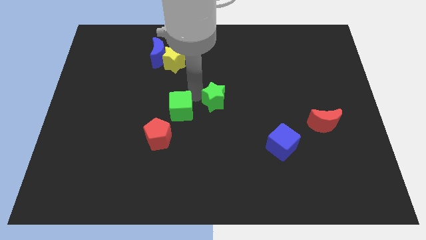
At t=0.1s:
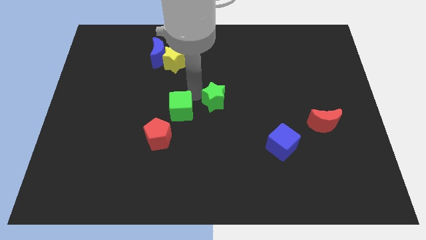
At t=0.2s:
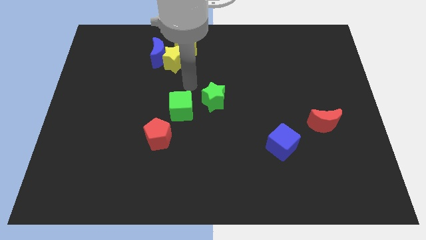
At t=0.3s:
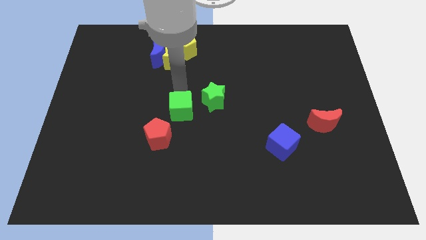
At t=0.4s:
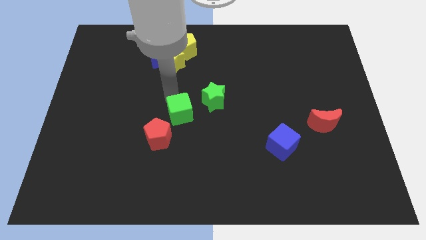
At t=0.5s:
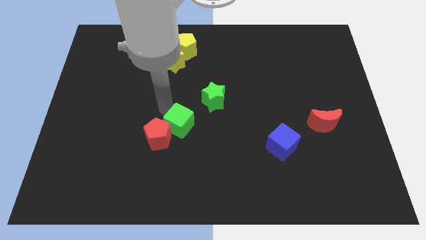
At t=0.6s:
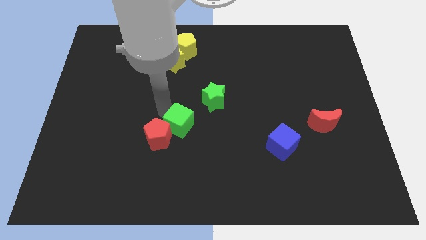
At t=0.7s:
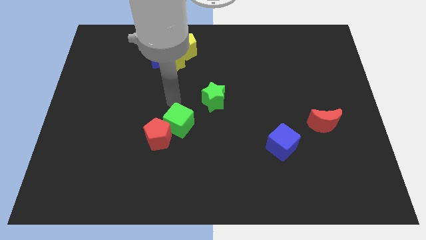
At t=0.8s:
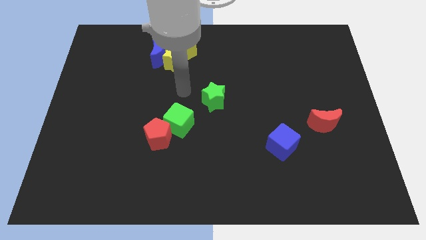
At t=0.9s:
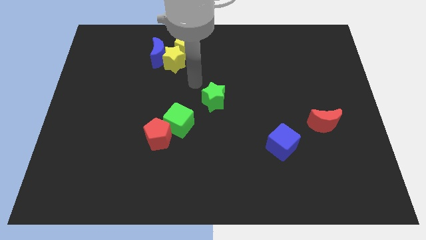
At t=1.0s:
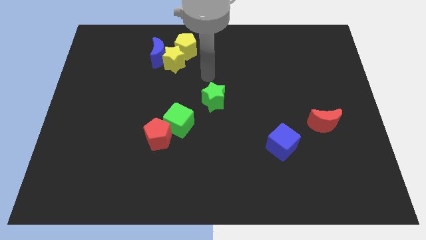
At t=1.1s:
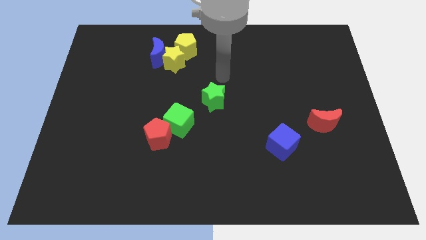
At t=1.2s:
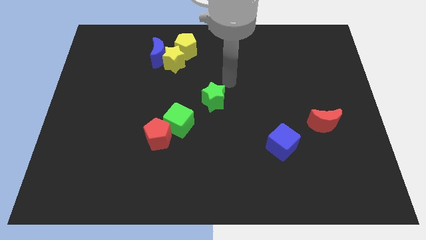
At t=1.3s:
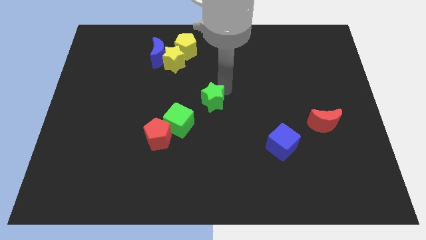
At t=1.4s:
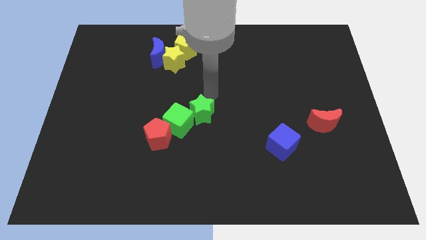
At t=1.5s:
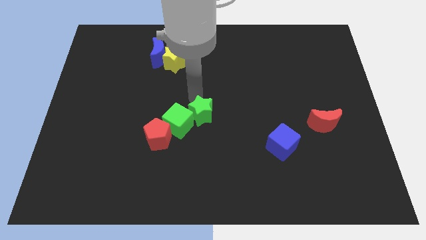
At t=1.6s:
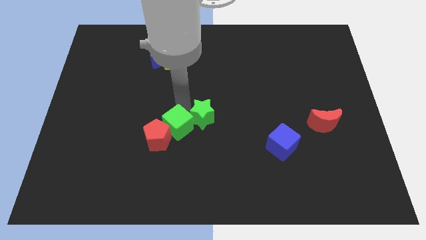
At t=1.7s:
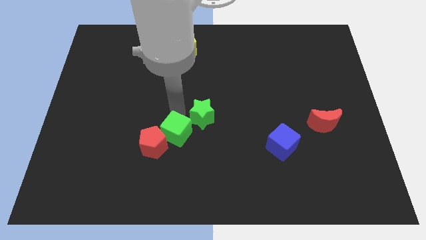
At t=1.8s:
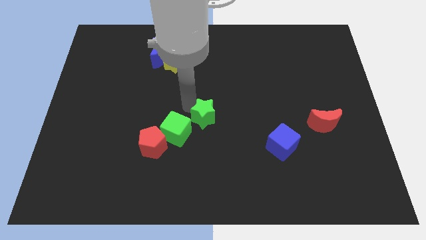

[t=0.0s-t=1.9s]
put the green star close to the green block

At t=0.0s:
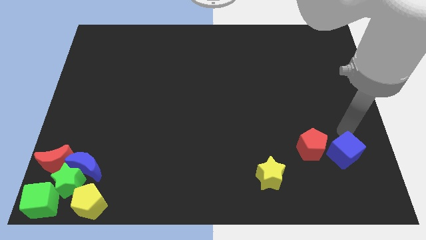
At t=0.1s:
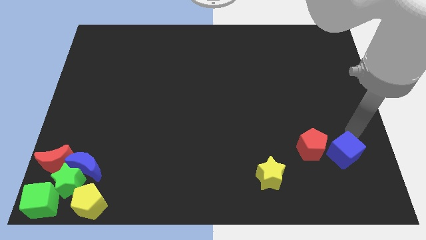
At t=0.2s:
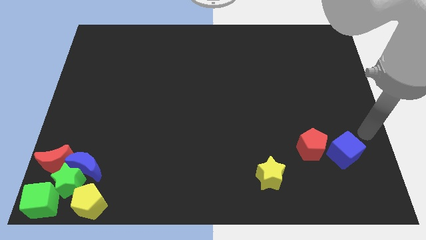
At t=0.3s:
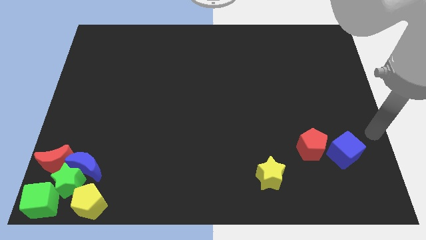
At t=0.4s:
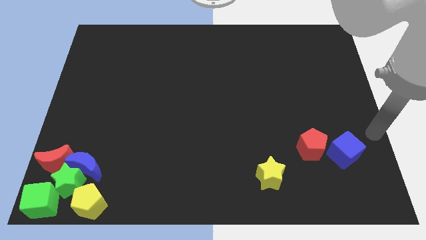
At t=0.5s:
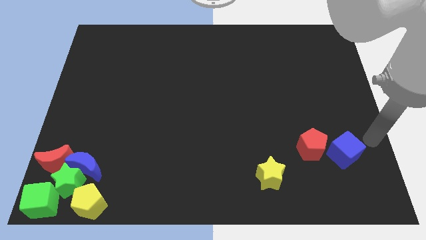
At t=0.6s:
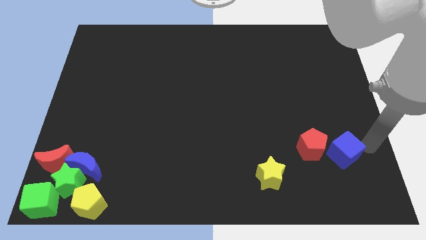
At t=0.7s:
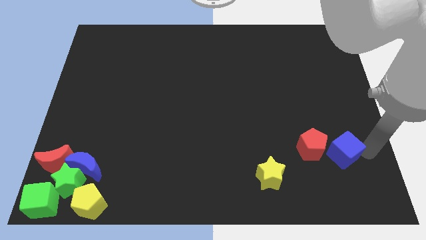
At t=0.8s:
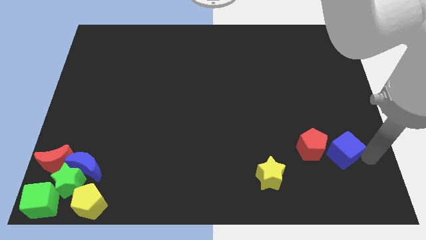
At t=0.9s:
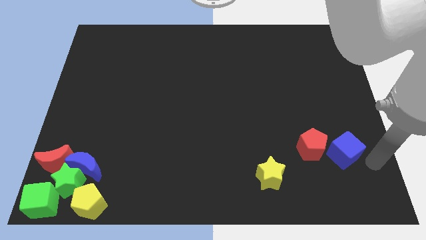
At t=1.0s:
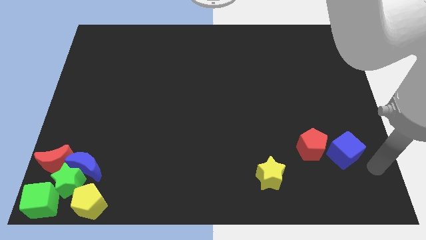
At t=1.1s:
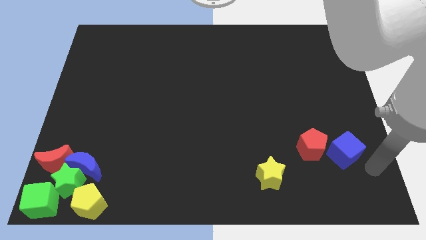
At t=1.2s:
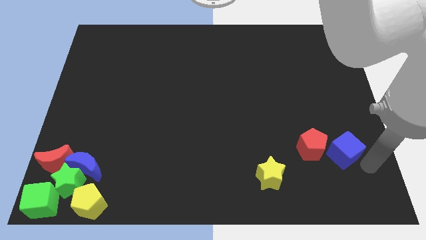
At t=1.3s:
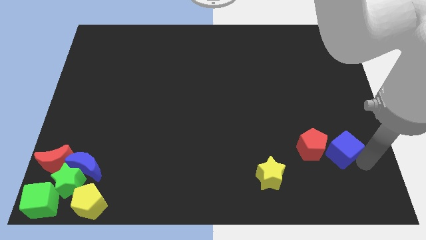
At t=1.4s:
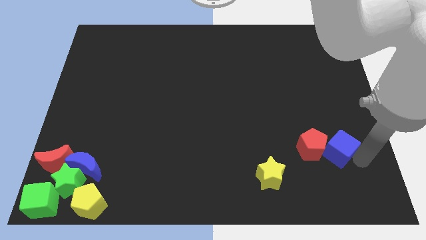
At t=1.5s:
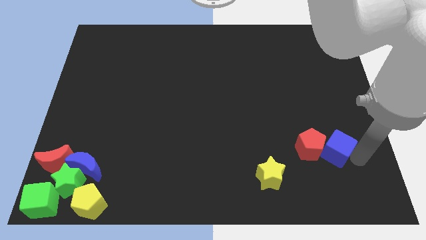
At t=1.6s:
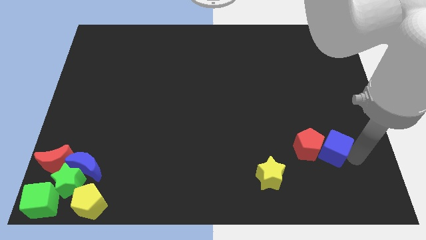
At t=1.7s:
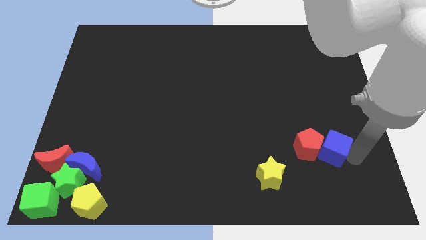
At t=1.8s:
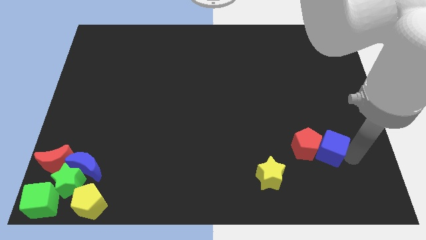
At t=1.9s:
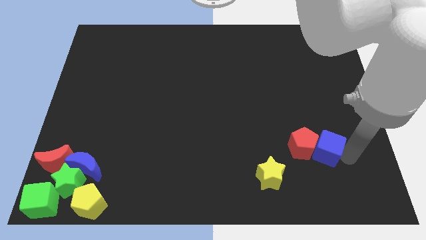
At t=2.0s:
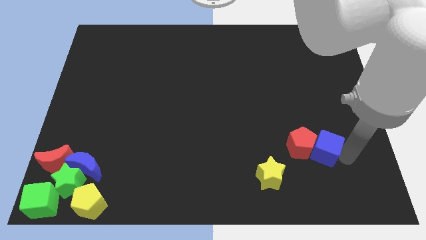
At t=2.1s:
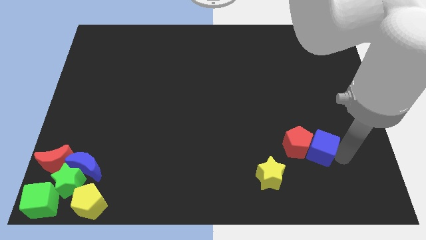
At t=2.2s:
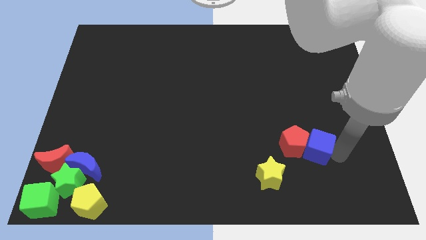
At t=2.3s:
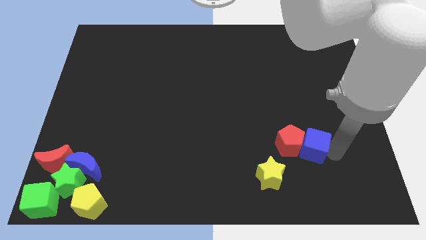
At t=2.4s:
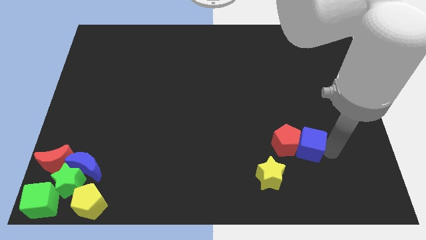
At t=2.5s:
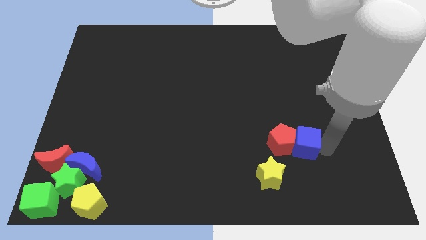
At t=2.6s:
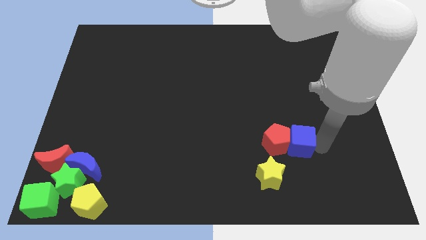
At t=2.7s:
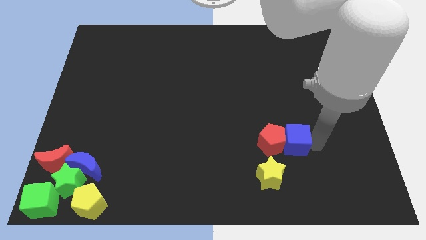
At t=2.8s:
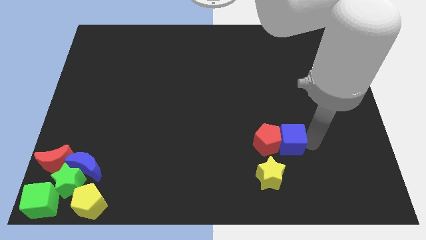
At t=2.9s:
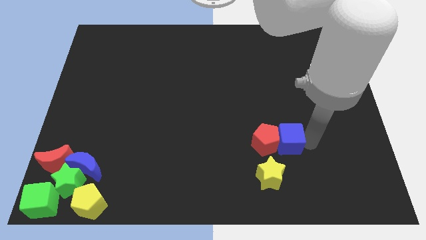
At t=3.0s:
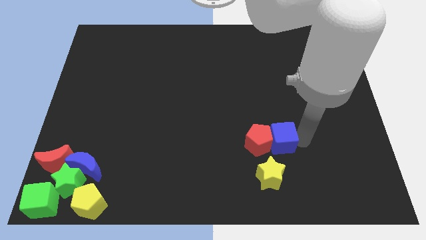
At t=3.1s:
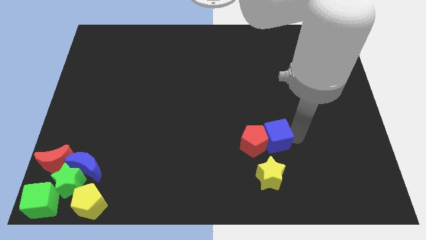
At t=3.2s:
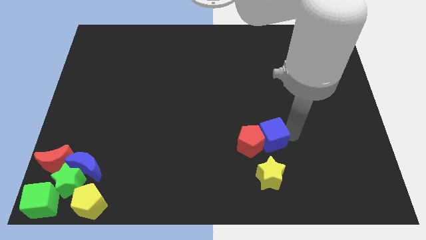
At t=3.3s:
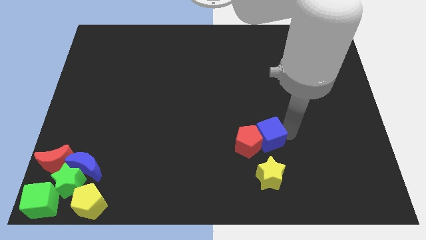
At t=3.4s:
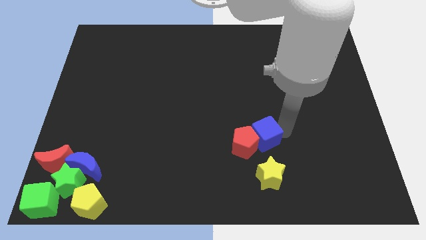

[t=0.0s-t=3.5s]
move the blue cube to the vertical top side of the yellow star

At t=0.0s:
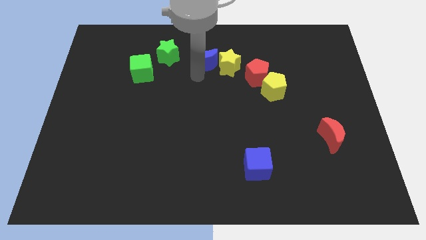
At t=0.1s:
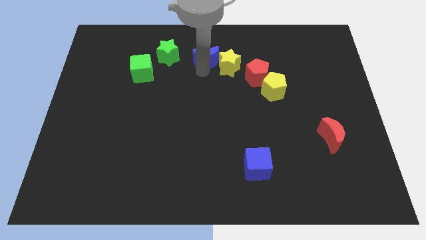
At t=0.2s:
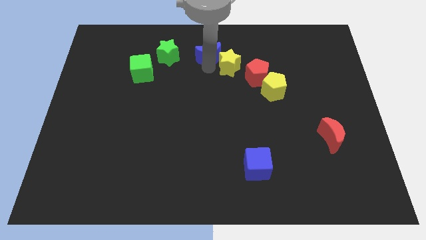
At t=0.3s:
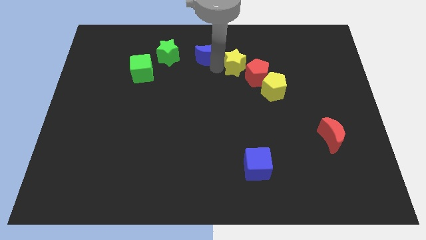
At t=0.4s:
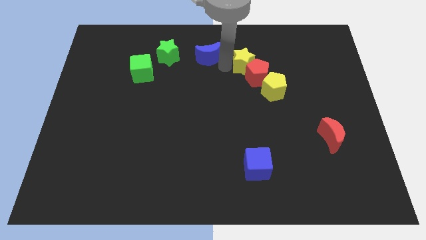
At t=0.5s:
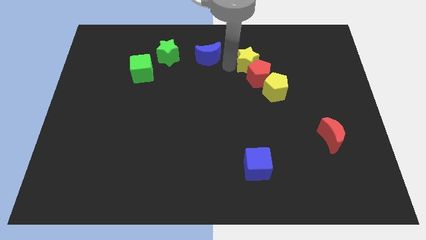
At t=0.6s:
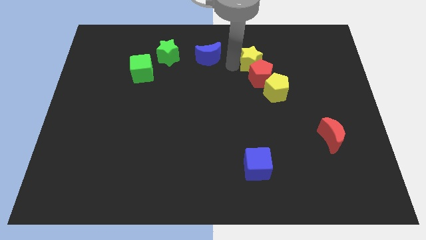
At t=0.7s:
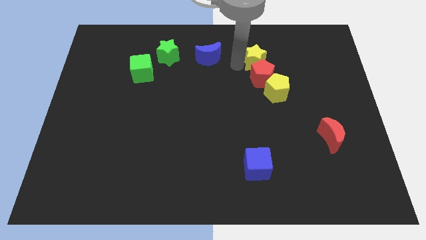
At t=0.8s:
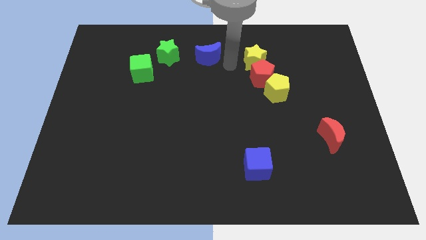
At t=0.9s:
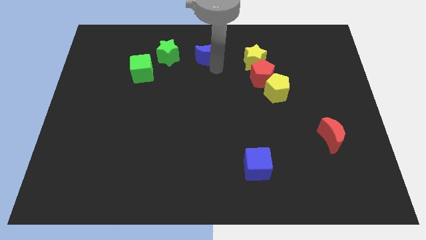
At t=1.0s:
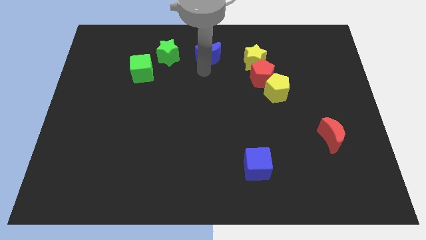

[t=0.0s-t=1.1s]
move the yellow star to the top of the red pentagon

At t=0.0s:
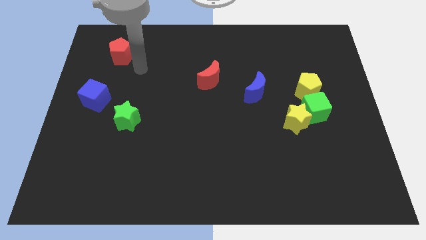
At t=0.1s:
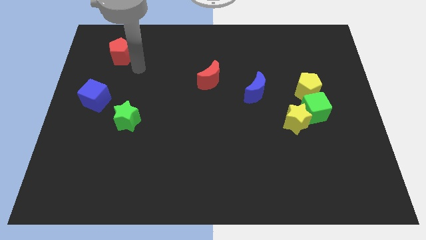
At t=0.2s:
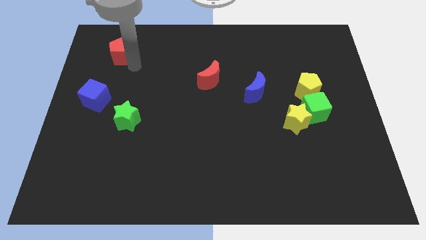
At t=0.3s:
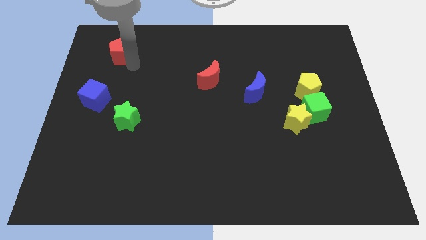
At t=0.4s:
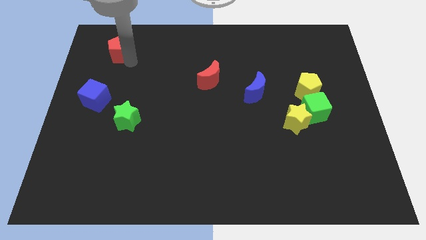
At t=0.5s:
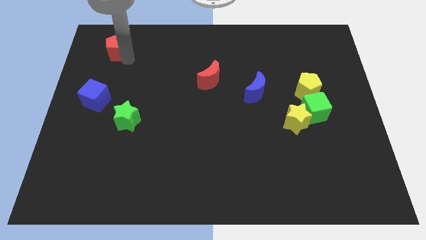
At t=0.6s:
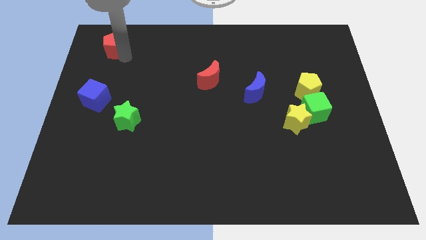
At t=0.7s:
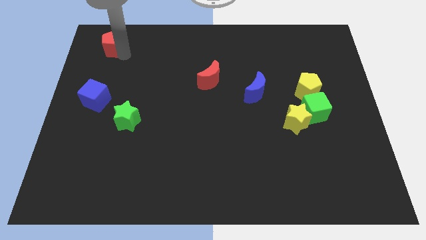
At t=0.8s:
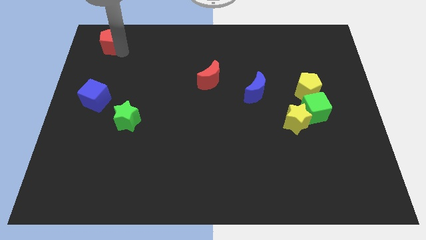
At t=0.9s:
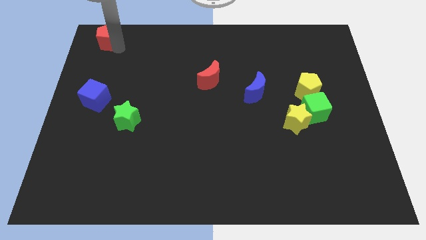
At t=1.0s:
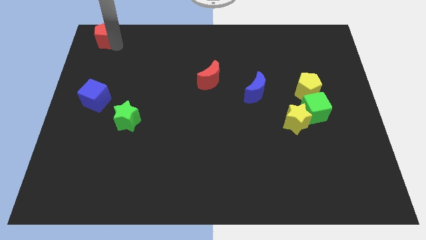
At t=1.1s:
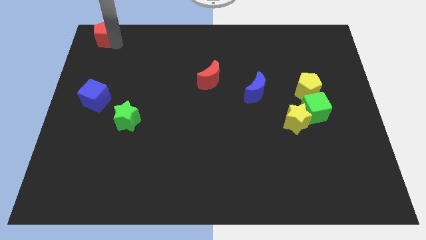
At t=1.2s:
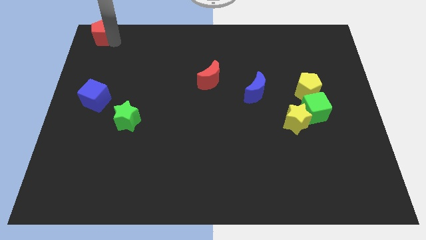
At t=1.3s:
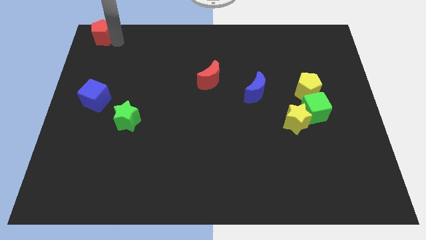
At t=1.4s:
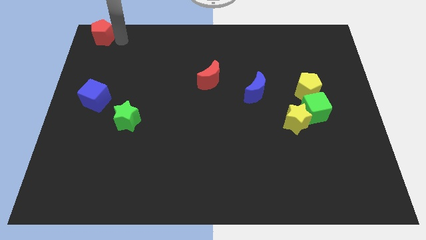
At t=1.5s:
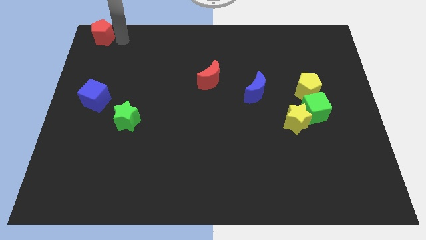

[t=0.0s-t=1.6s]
move the red pentagon to the top left corner of the board

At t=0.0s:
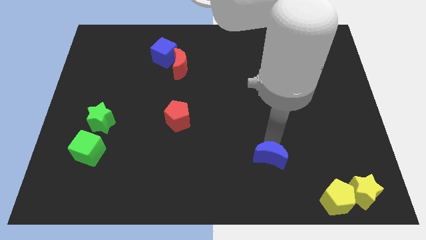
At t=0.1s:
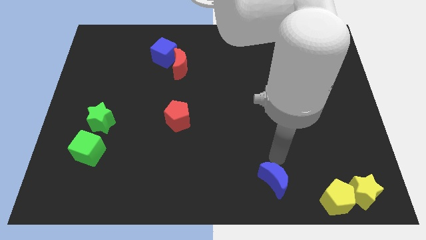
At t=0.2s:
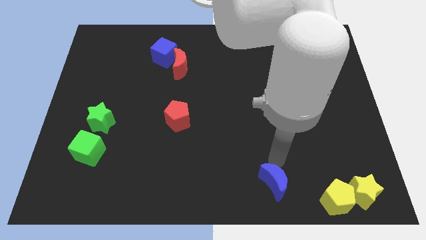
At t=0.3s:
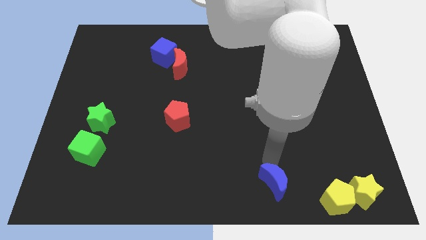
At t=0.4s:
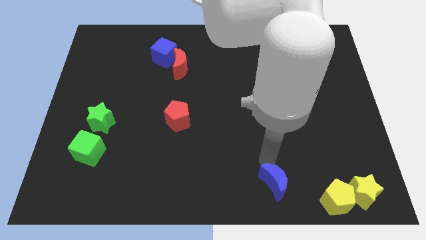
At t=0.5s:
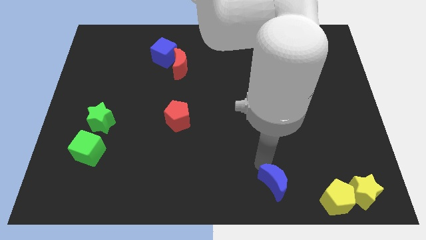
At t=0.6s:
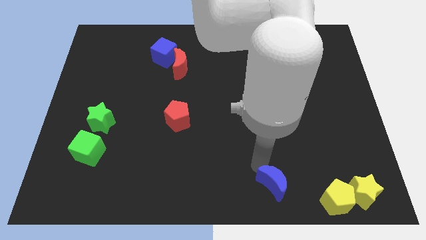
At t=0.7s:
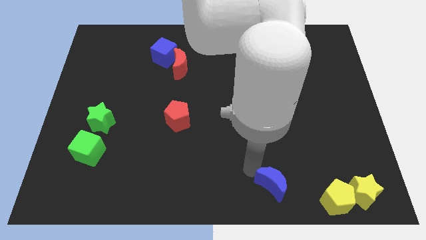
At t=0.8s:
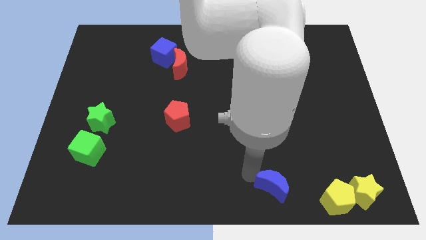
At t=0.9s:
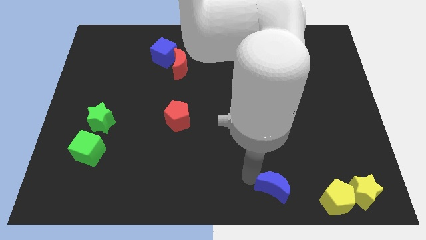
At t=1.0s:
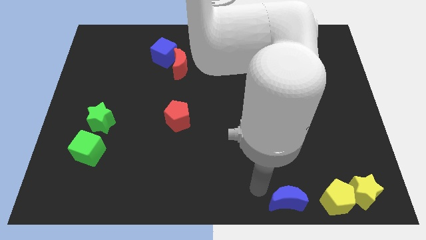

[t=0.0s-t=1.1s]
push the blue crescent to the left of the yellow pentagon
